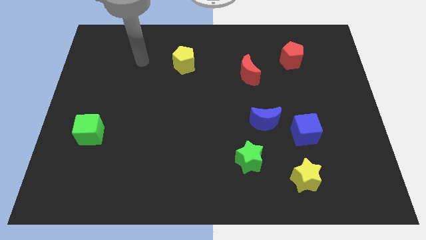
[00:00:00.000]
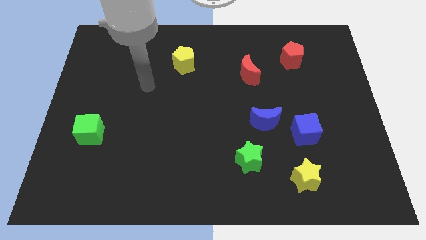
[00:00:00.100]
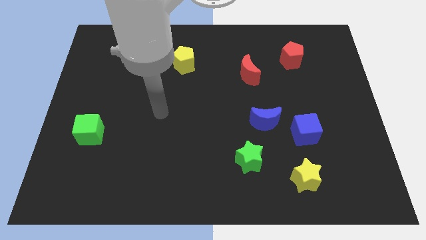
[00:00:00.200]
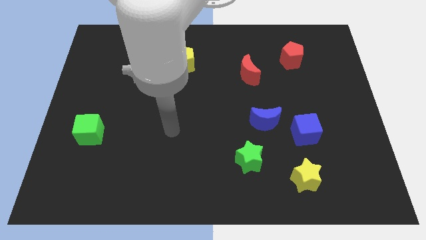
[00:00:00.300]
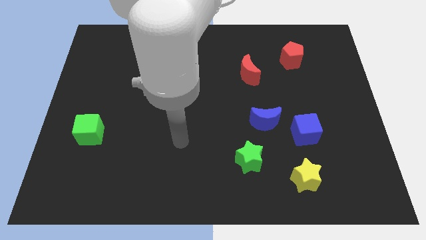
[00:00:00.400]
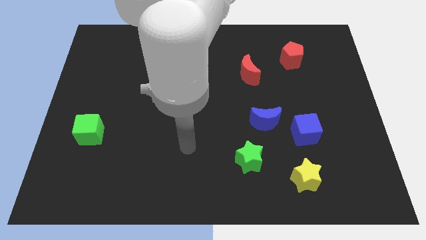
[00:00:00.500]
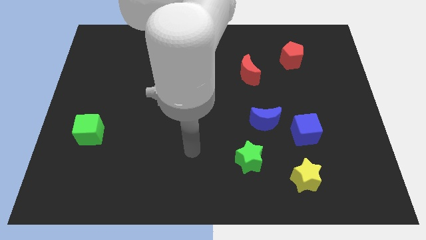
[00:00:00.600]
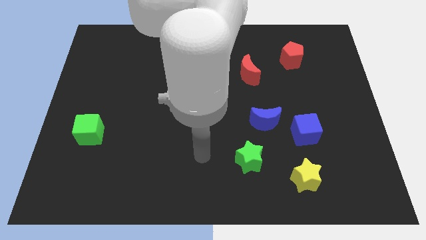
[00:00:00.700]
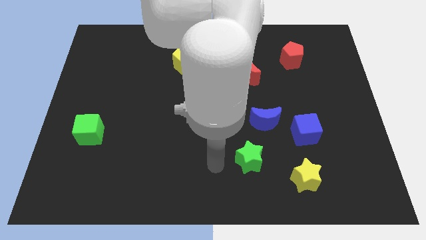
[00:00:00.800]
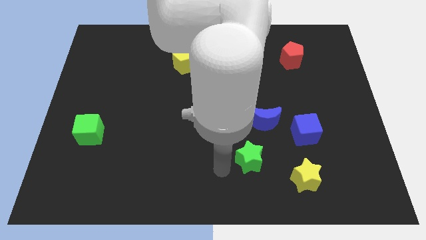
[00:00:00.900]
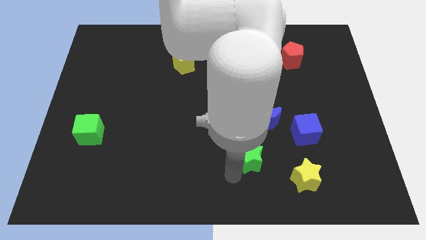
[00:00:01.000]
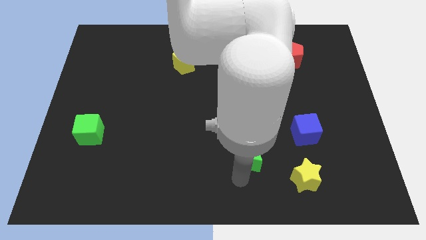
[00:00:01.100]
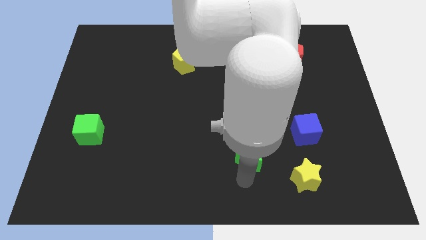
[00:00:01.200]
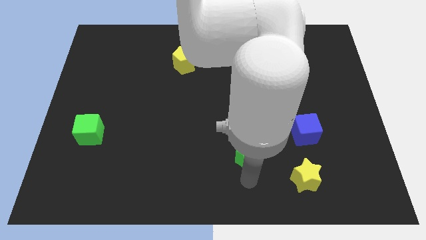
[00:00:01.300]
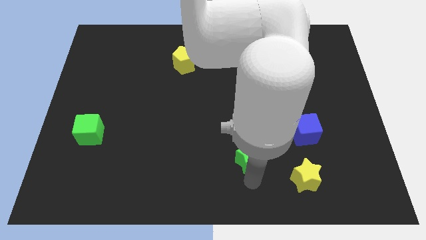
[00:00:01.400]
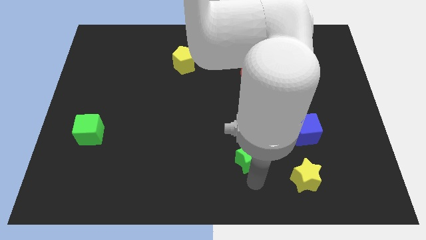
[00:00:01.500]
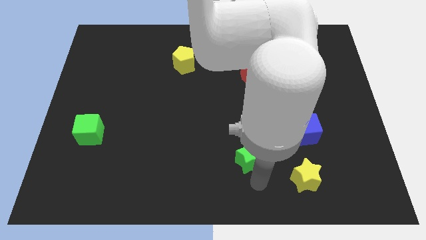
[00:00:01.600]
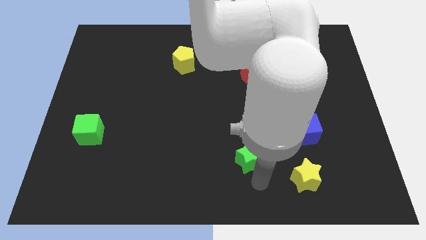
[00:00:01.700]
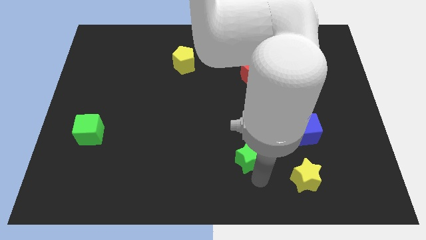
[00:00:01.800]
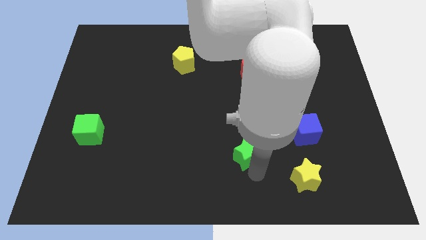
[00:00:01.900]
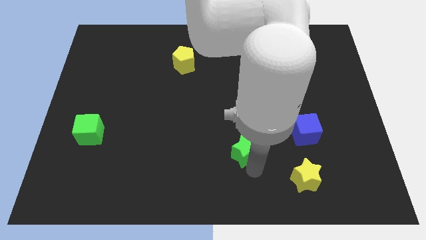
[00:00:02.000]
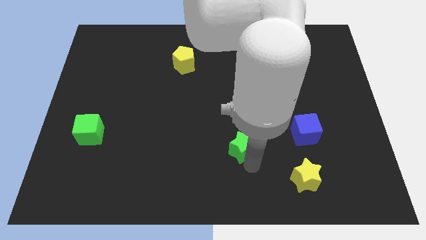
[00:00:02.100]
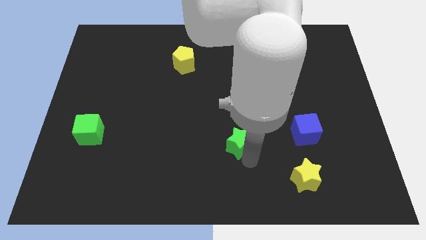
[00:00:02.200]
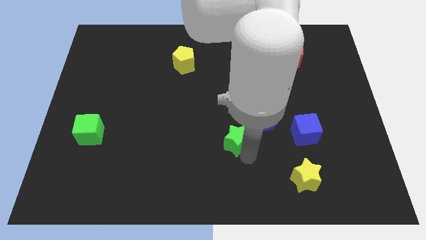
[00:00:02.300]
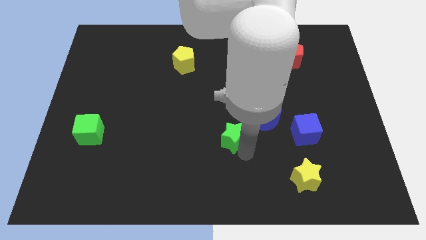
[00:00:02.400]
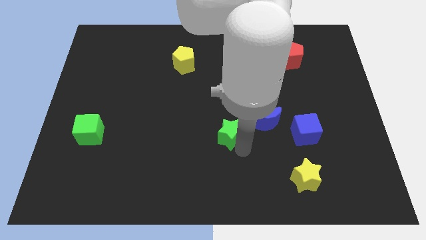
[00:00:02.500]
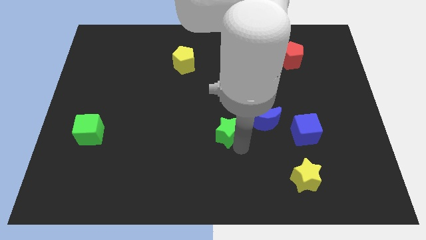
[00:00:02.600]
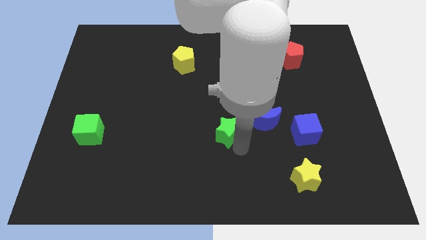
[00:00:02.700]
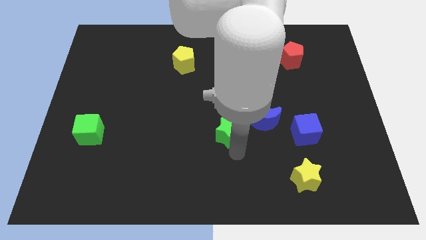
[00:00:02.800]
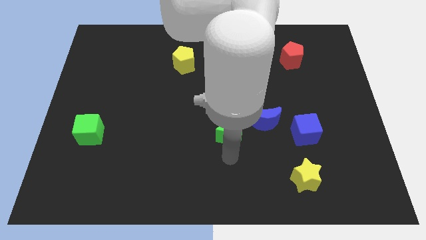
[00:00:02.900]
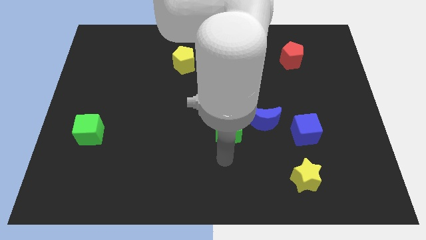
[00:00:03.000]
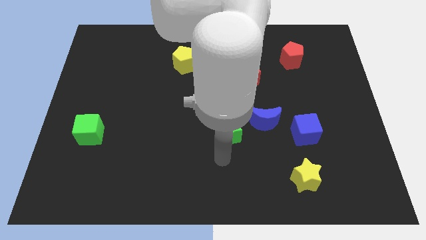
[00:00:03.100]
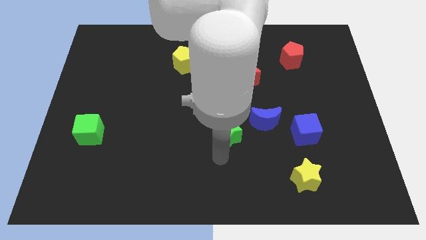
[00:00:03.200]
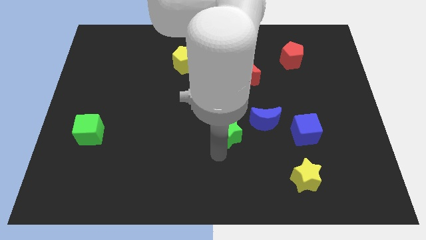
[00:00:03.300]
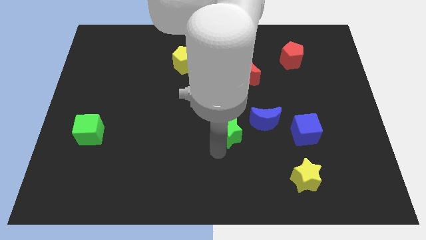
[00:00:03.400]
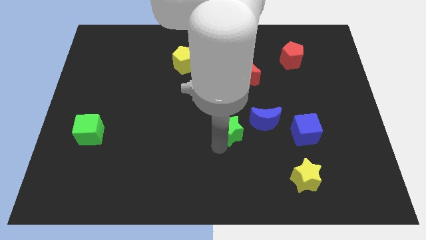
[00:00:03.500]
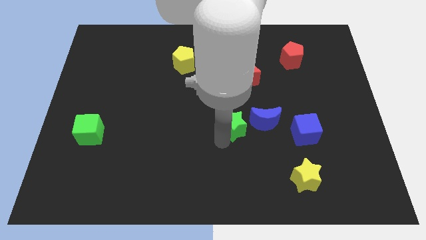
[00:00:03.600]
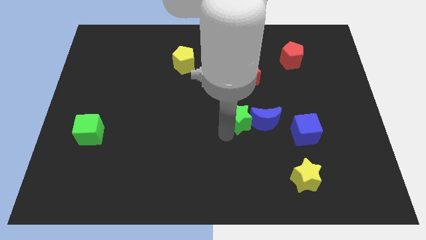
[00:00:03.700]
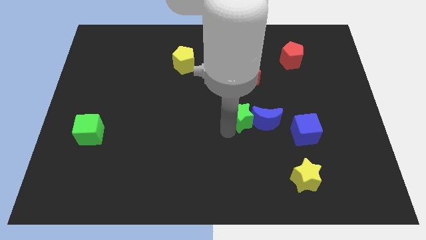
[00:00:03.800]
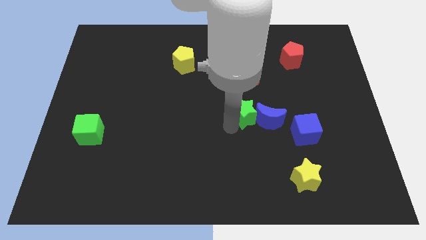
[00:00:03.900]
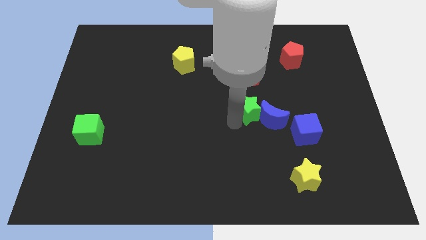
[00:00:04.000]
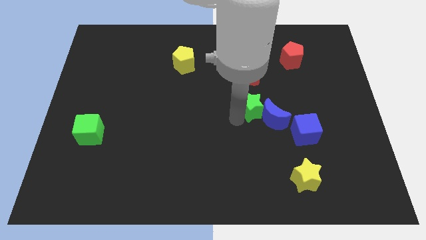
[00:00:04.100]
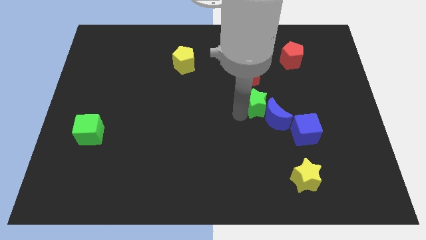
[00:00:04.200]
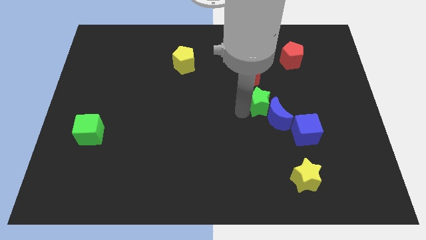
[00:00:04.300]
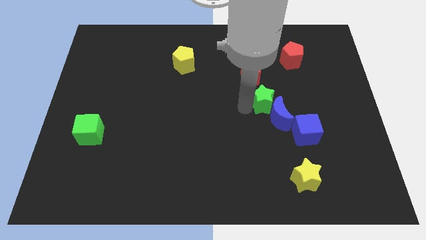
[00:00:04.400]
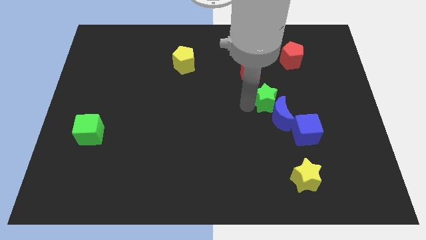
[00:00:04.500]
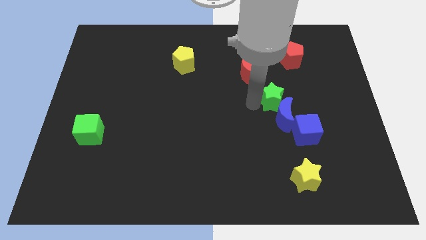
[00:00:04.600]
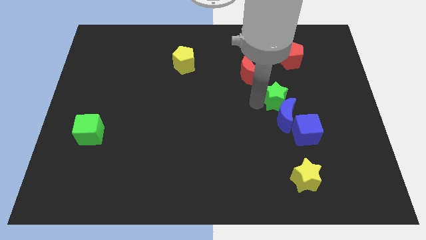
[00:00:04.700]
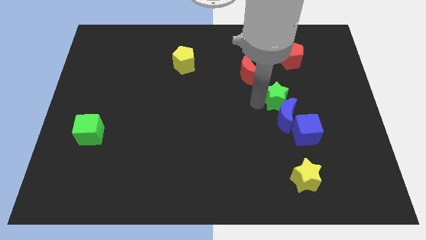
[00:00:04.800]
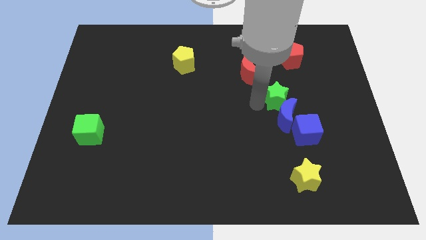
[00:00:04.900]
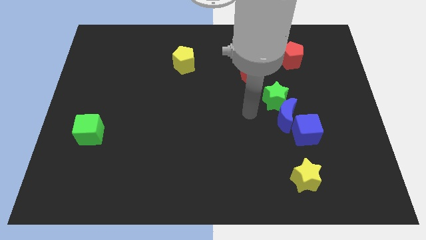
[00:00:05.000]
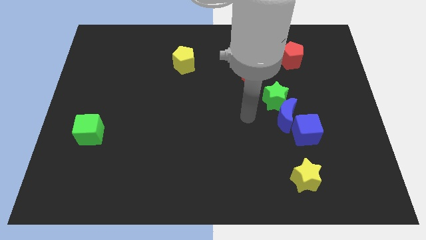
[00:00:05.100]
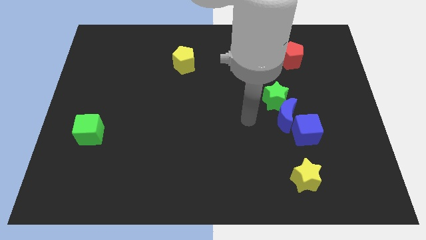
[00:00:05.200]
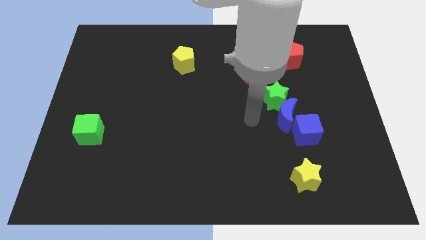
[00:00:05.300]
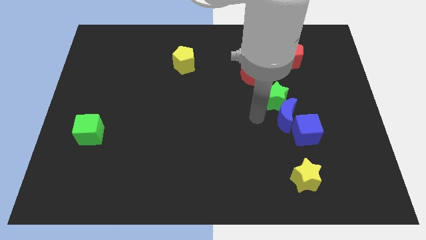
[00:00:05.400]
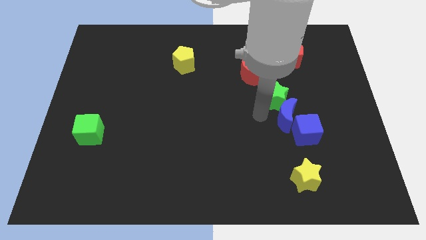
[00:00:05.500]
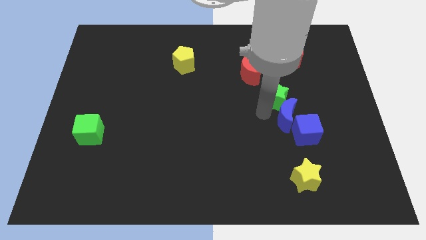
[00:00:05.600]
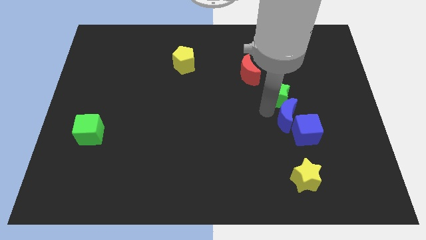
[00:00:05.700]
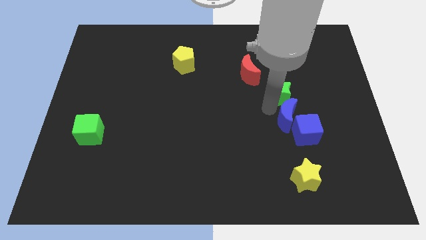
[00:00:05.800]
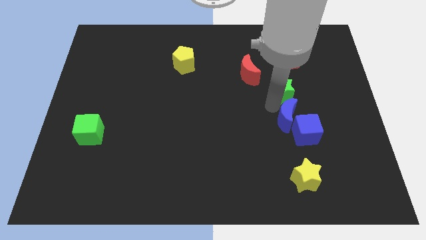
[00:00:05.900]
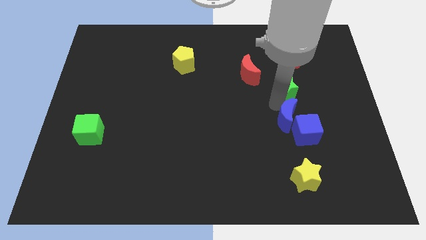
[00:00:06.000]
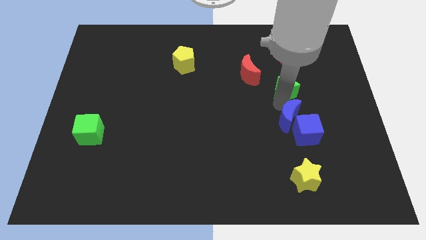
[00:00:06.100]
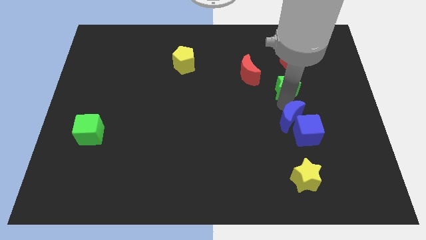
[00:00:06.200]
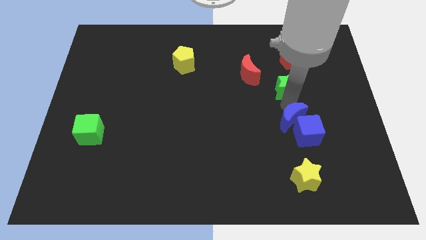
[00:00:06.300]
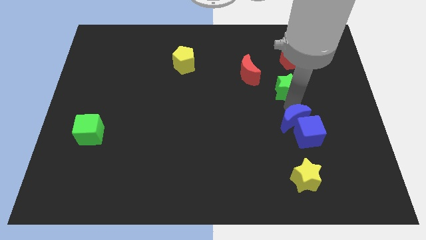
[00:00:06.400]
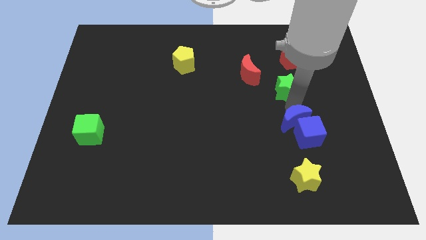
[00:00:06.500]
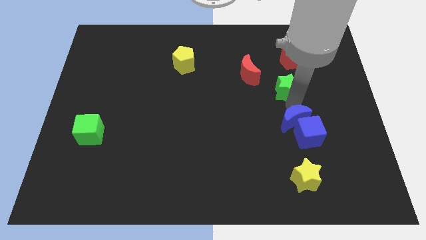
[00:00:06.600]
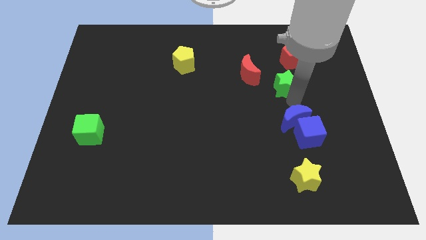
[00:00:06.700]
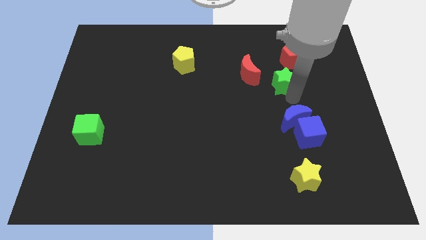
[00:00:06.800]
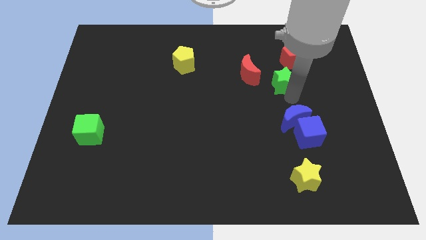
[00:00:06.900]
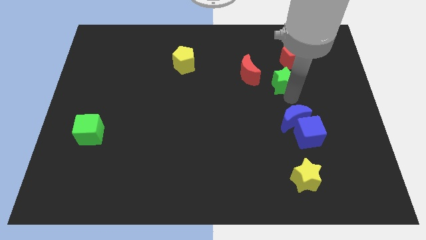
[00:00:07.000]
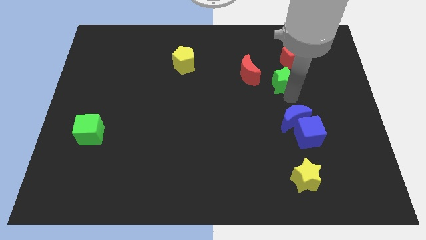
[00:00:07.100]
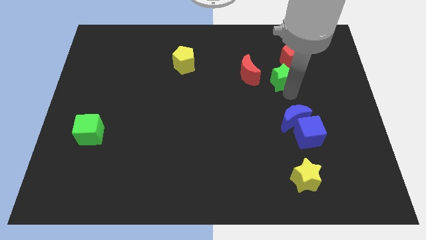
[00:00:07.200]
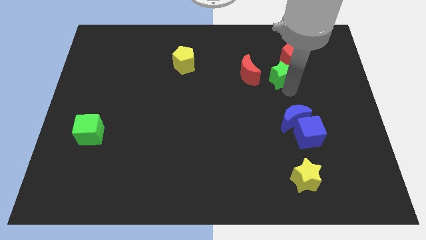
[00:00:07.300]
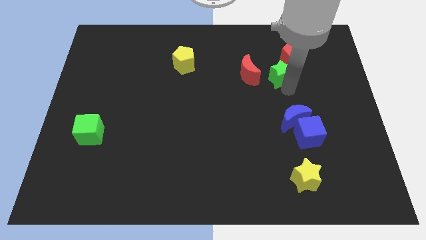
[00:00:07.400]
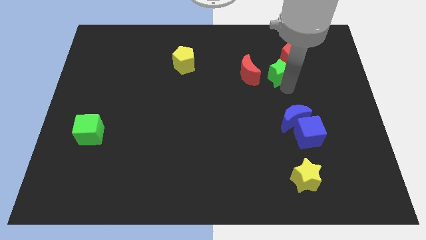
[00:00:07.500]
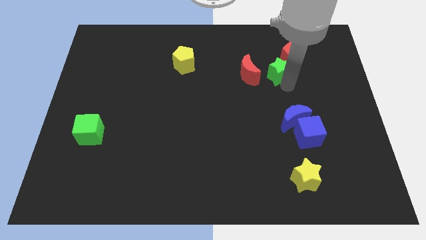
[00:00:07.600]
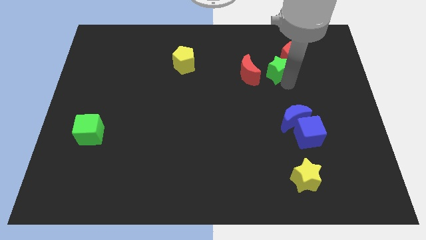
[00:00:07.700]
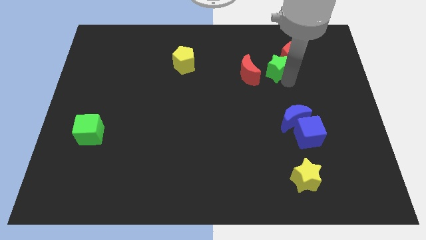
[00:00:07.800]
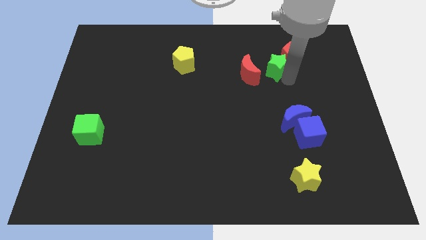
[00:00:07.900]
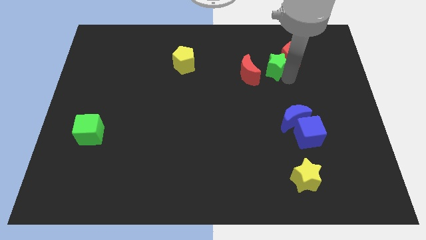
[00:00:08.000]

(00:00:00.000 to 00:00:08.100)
push the green star to the red pentagon

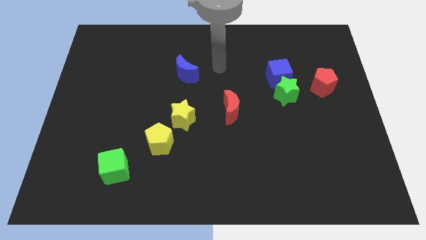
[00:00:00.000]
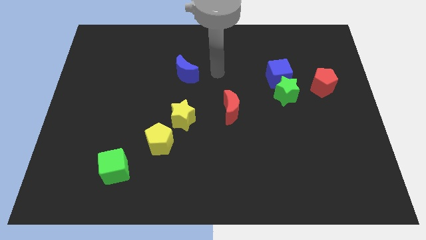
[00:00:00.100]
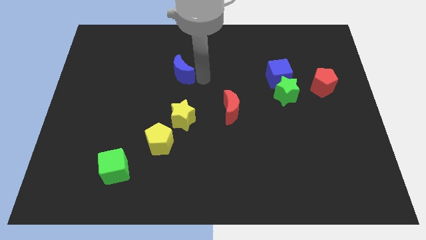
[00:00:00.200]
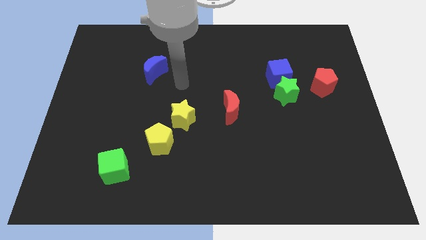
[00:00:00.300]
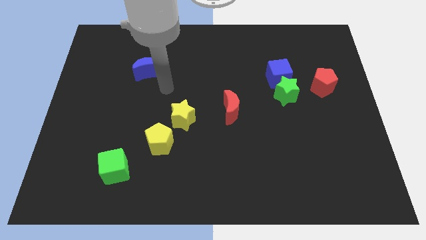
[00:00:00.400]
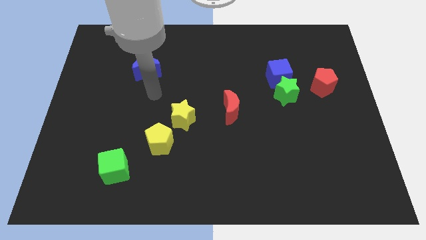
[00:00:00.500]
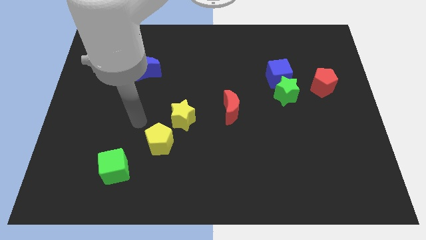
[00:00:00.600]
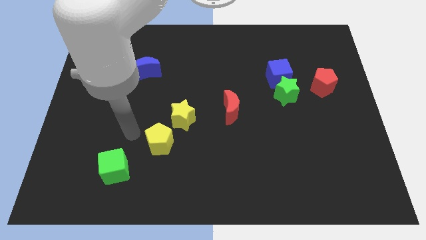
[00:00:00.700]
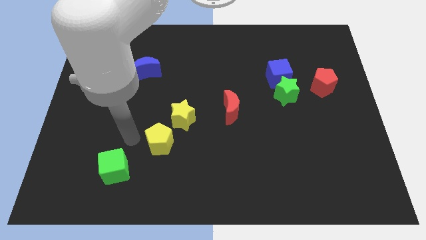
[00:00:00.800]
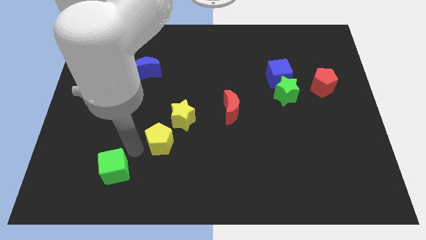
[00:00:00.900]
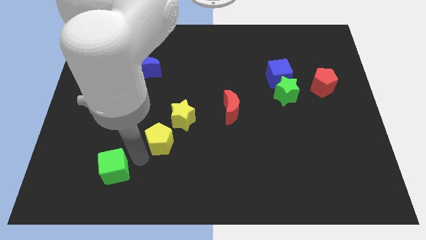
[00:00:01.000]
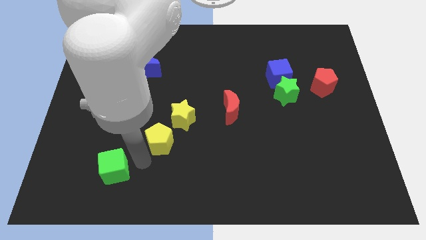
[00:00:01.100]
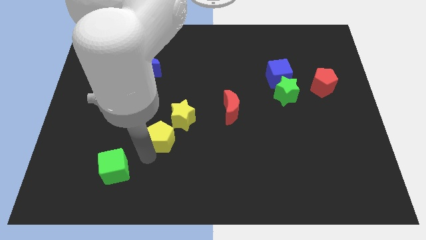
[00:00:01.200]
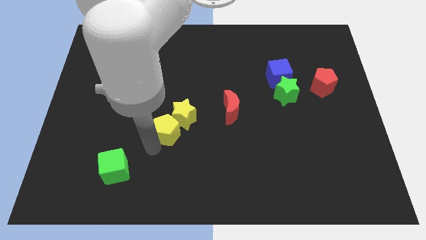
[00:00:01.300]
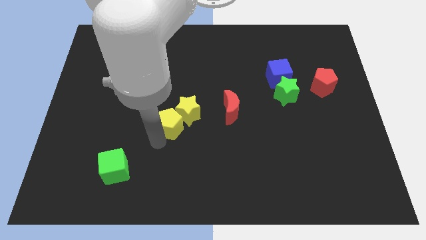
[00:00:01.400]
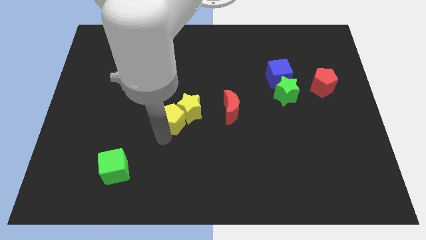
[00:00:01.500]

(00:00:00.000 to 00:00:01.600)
put the yellow pentagon next to the yellow star
